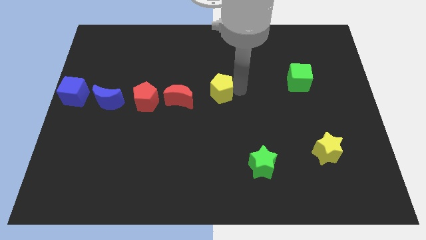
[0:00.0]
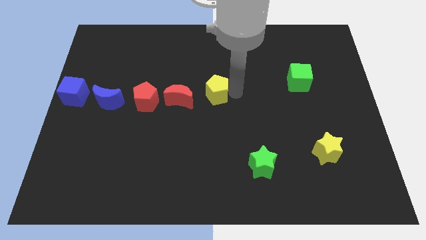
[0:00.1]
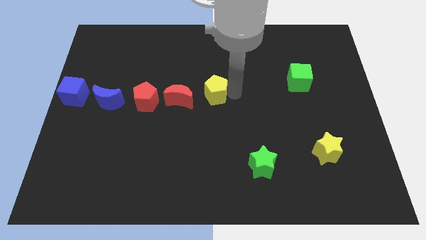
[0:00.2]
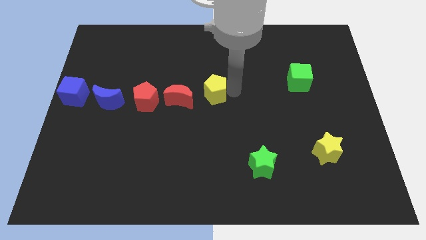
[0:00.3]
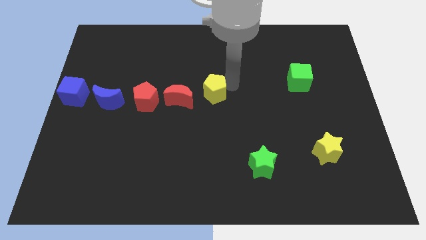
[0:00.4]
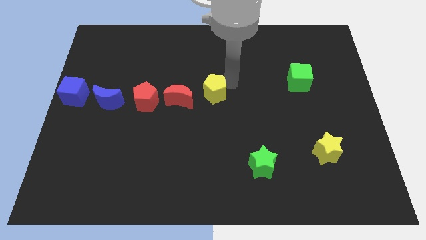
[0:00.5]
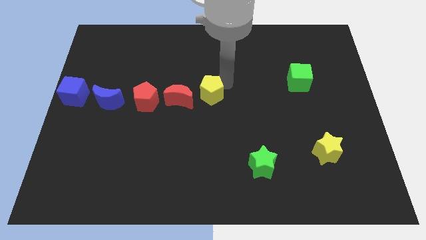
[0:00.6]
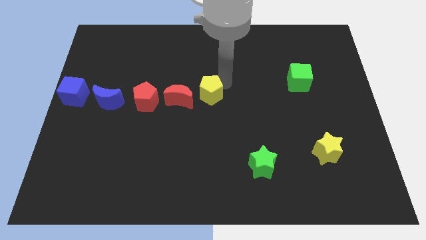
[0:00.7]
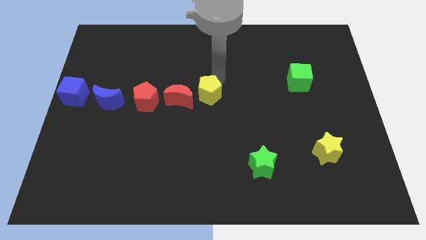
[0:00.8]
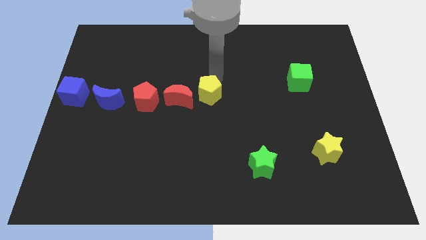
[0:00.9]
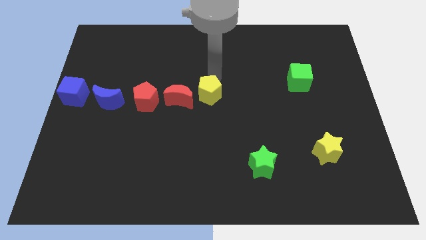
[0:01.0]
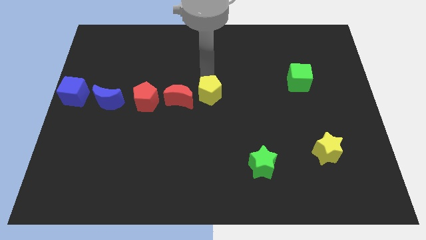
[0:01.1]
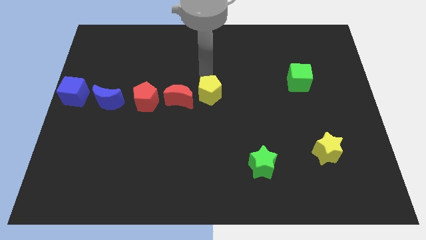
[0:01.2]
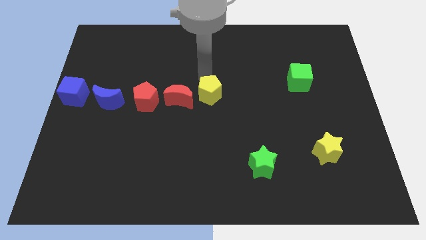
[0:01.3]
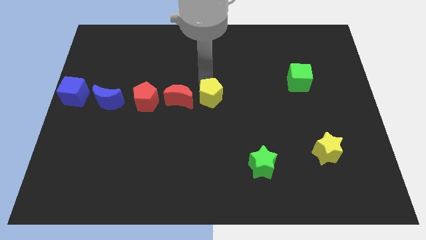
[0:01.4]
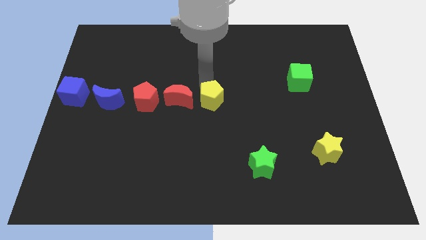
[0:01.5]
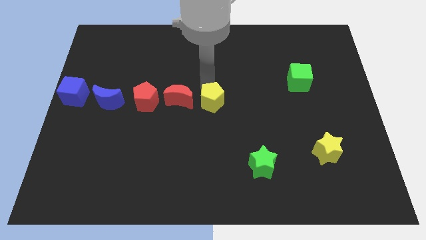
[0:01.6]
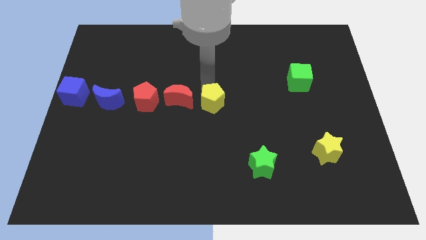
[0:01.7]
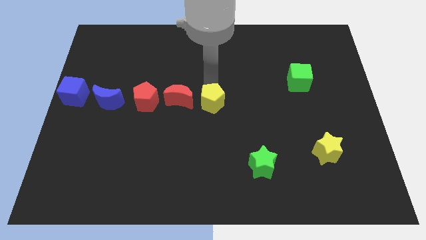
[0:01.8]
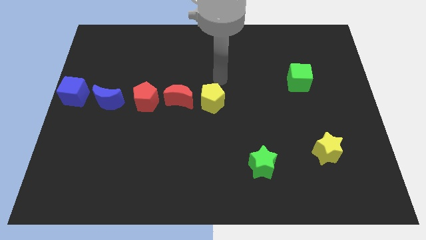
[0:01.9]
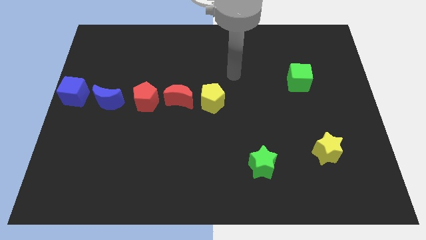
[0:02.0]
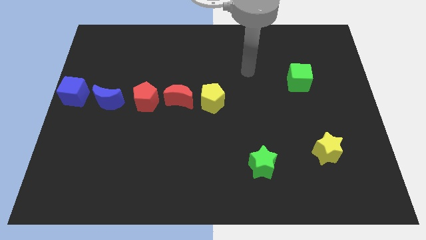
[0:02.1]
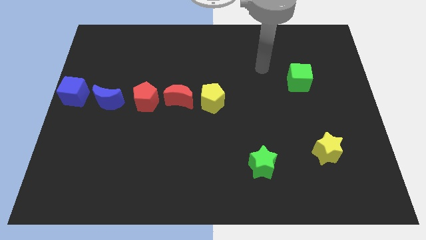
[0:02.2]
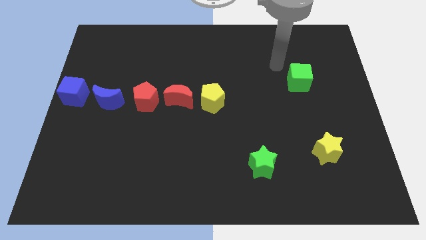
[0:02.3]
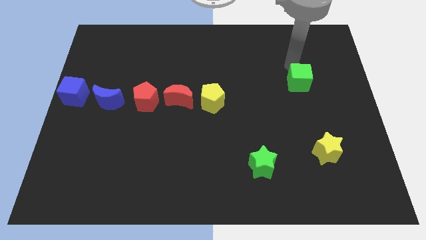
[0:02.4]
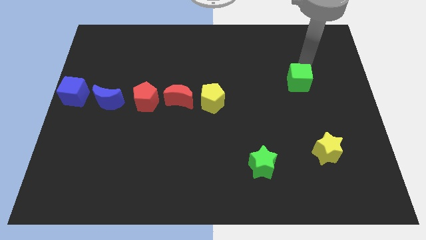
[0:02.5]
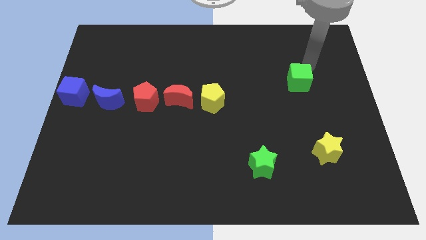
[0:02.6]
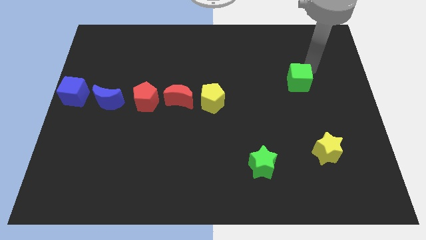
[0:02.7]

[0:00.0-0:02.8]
adjust the yellow pentagon to the right side of the red crescent

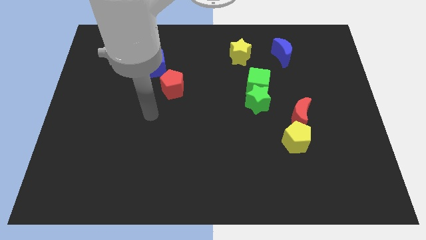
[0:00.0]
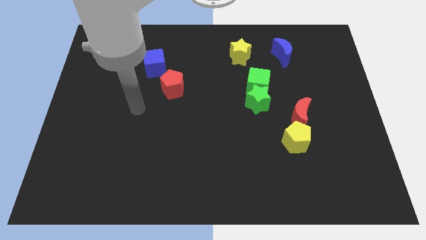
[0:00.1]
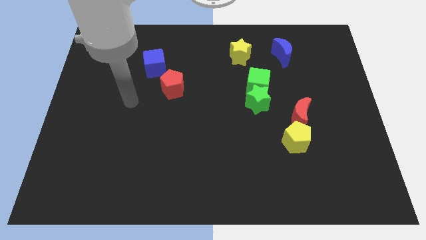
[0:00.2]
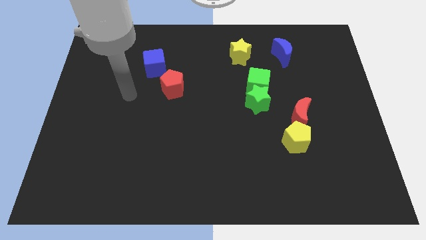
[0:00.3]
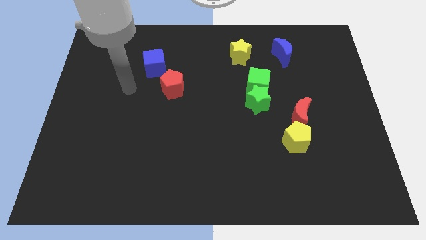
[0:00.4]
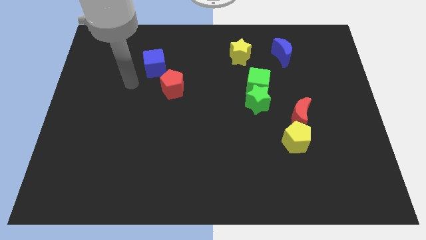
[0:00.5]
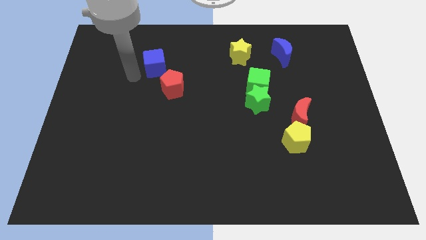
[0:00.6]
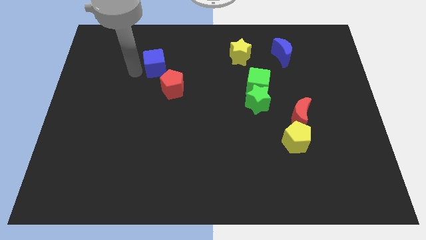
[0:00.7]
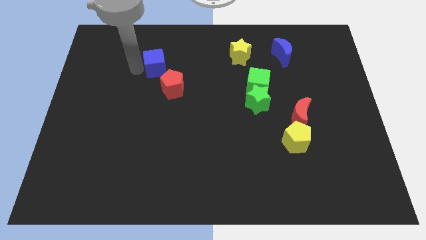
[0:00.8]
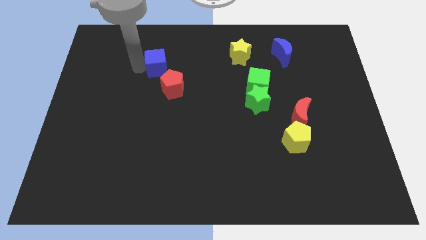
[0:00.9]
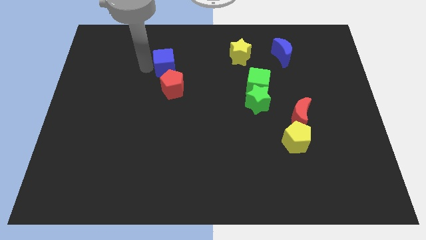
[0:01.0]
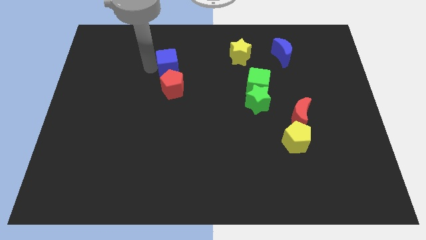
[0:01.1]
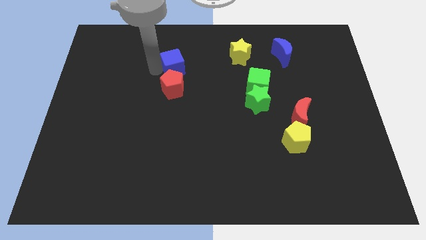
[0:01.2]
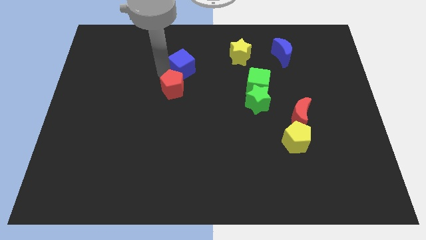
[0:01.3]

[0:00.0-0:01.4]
place the blue cube above the red pentagon

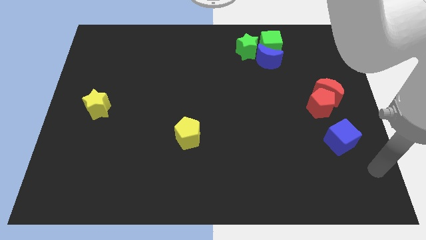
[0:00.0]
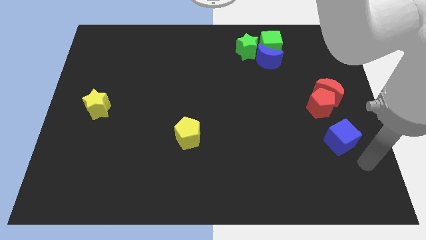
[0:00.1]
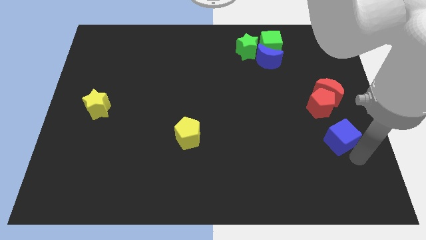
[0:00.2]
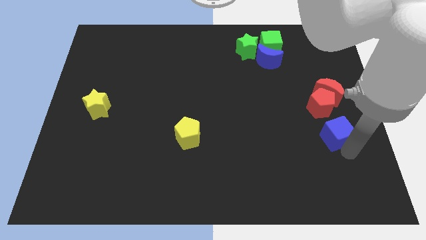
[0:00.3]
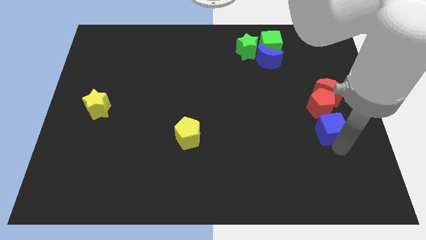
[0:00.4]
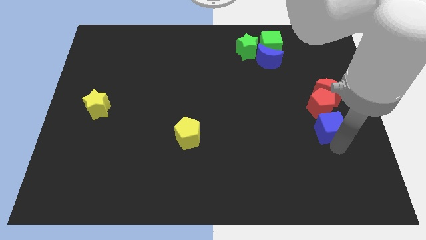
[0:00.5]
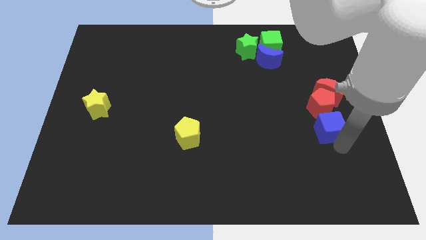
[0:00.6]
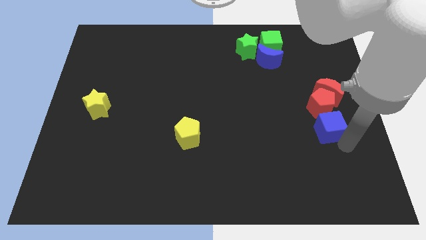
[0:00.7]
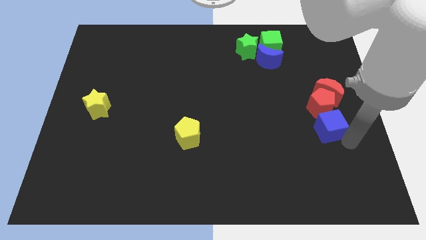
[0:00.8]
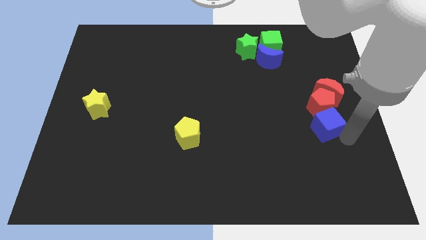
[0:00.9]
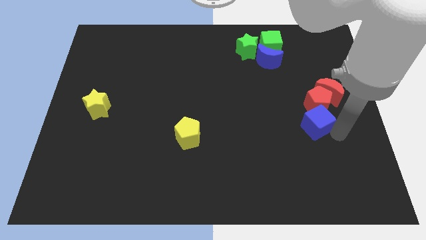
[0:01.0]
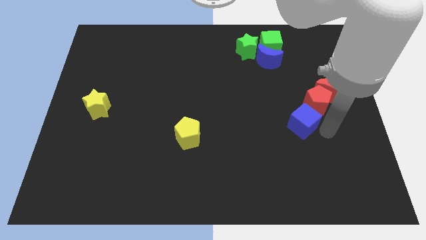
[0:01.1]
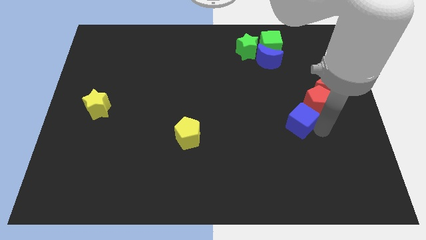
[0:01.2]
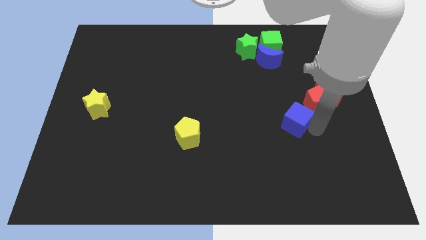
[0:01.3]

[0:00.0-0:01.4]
move the blue cube into the red pentagon

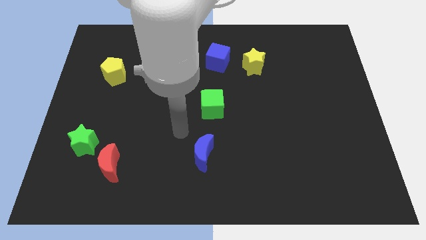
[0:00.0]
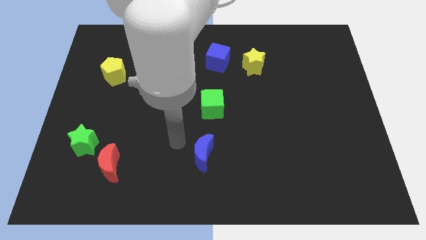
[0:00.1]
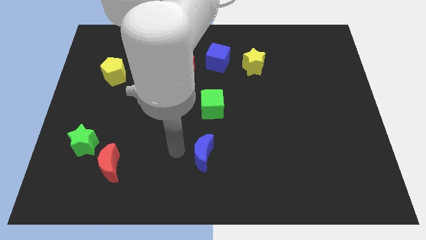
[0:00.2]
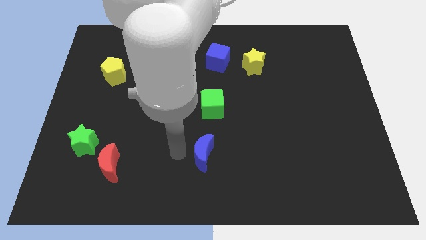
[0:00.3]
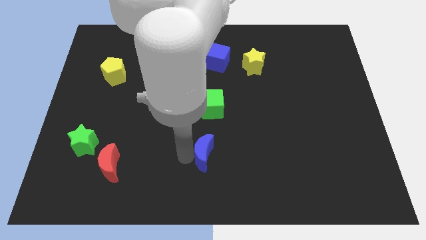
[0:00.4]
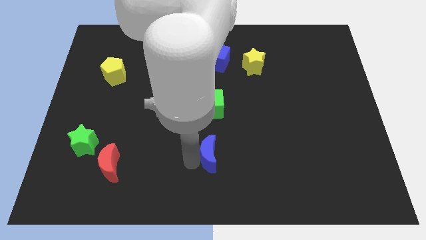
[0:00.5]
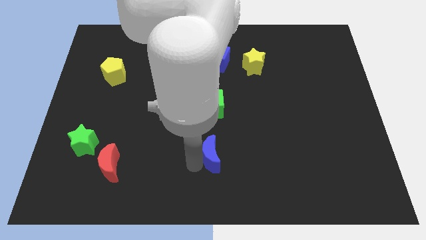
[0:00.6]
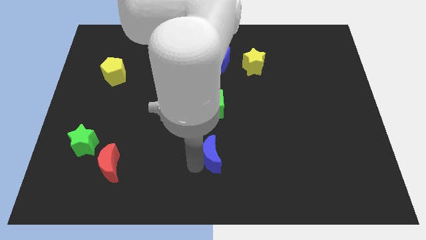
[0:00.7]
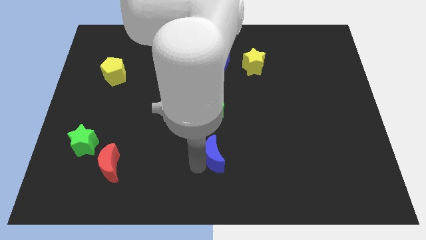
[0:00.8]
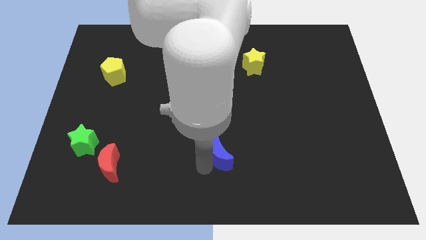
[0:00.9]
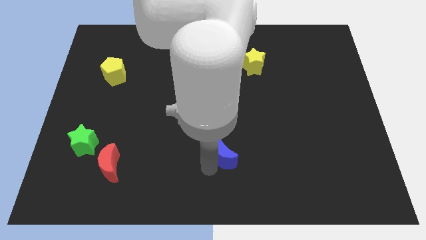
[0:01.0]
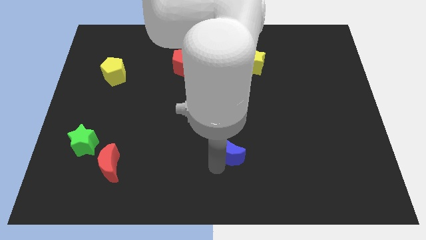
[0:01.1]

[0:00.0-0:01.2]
put blue moon below green cube

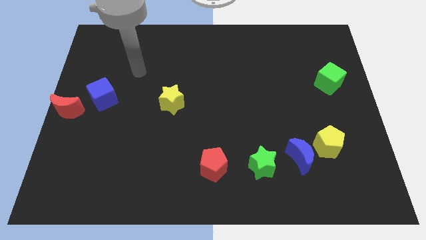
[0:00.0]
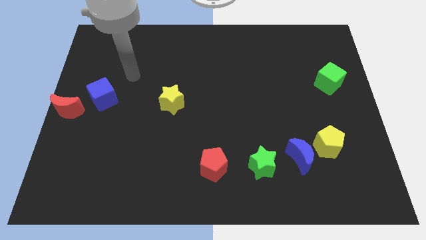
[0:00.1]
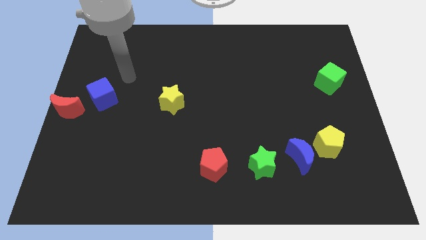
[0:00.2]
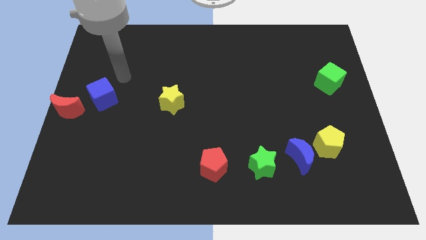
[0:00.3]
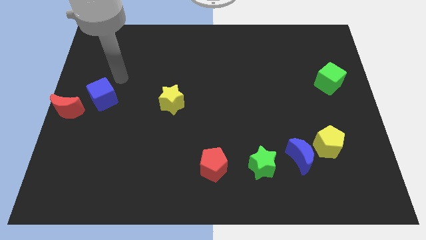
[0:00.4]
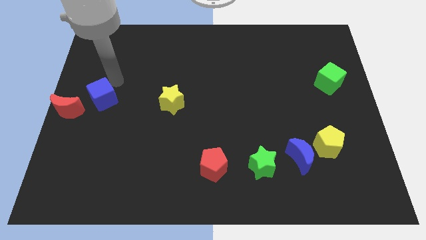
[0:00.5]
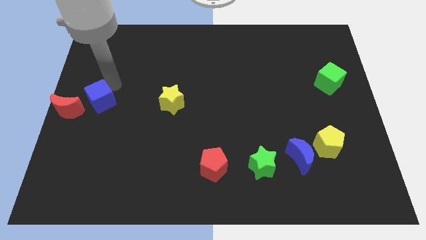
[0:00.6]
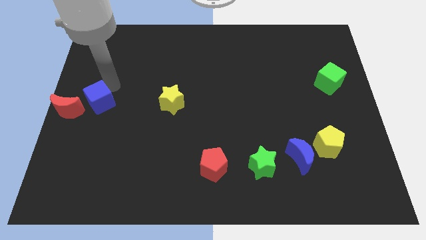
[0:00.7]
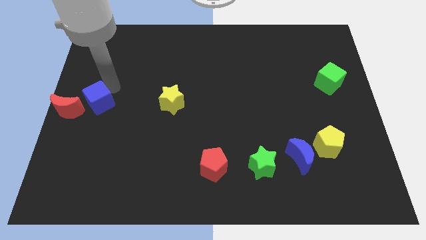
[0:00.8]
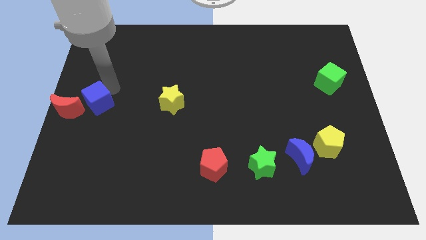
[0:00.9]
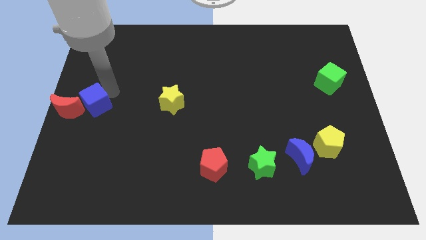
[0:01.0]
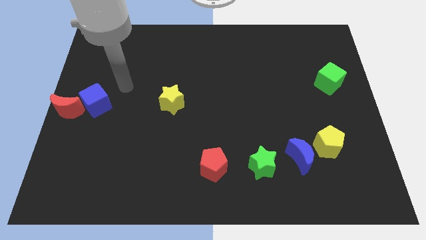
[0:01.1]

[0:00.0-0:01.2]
slide blue cube close to red moon

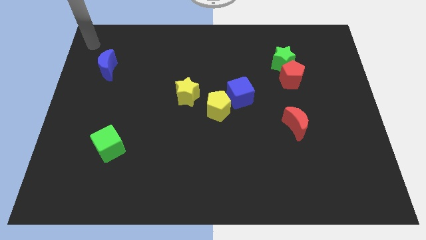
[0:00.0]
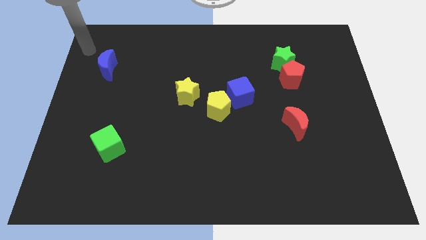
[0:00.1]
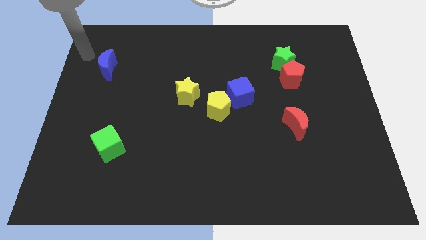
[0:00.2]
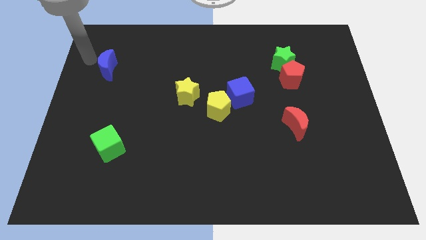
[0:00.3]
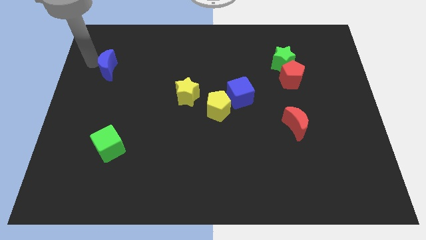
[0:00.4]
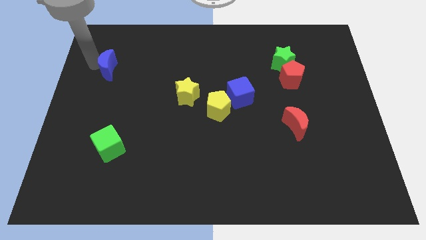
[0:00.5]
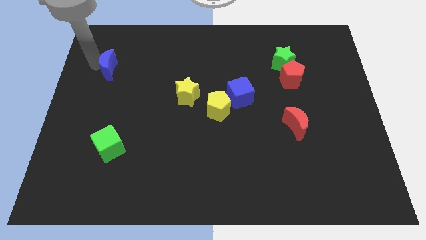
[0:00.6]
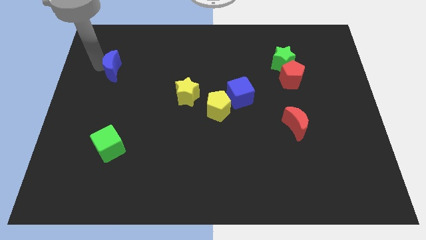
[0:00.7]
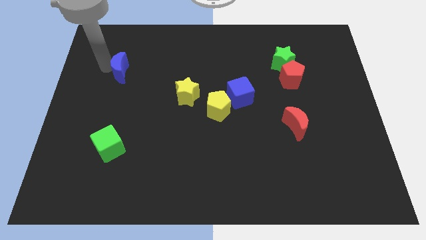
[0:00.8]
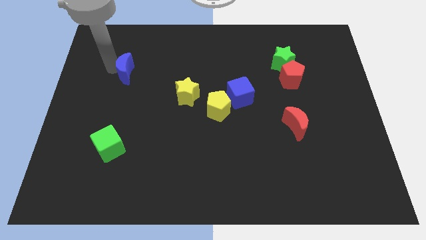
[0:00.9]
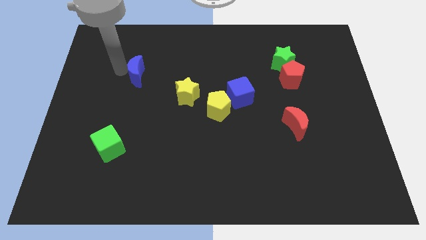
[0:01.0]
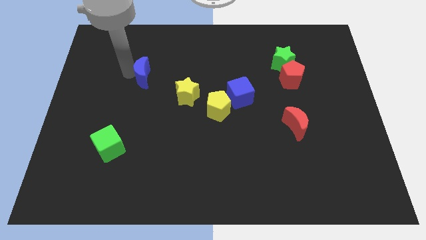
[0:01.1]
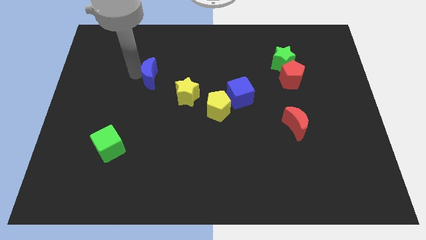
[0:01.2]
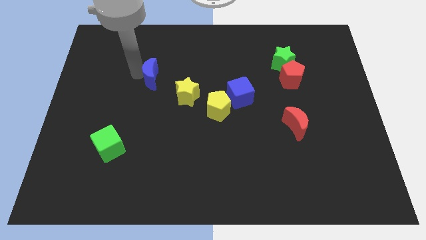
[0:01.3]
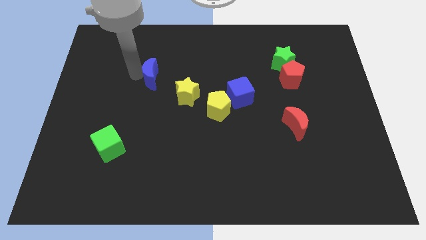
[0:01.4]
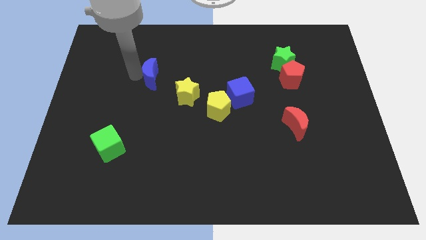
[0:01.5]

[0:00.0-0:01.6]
place the blue moon diagonal to the yellow star
